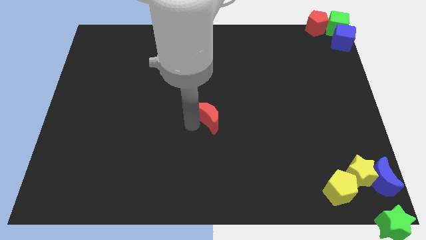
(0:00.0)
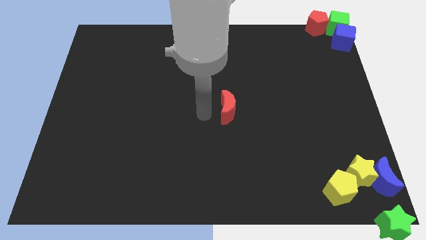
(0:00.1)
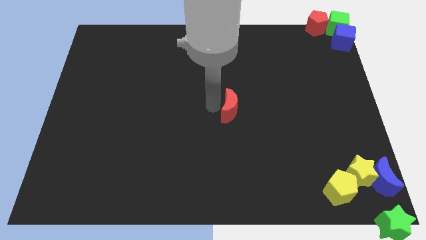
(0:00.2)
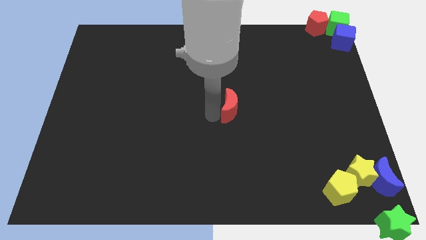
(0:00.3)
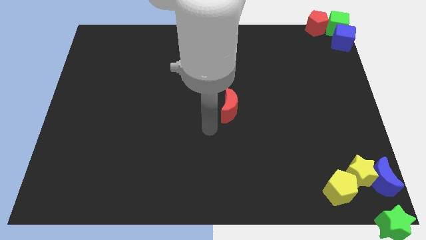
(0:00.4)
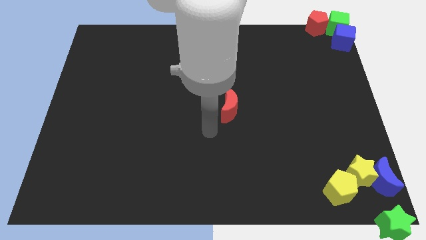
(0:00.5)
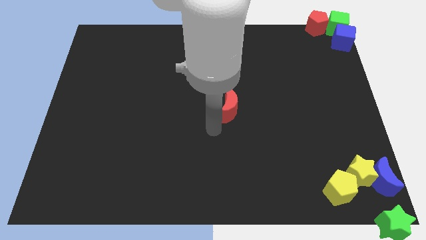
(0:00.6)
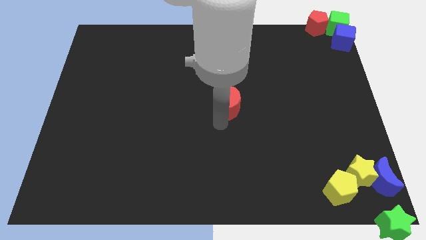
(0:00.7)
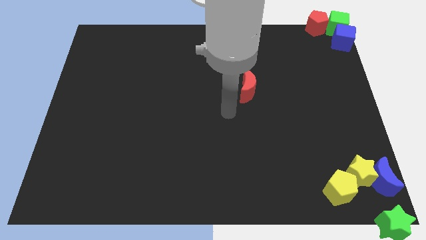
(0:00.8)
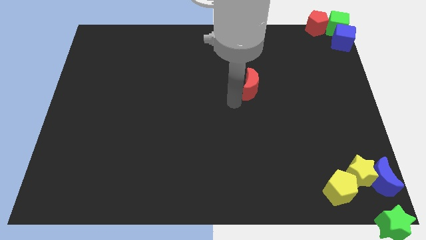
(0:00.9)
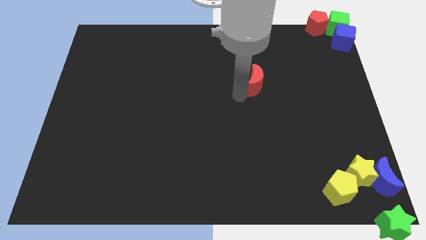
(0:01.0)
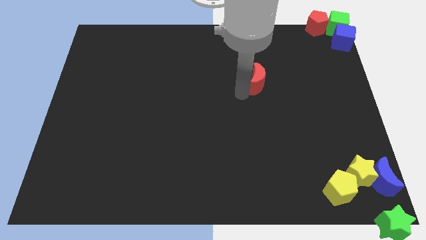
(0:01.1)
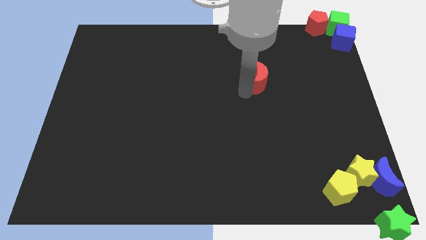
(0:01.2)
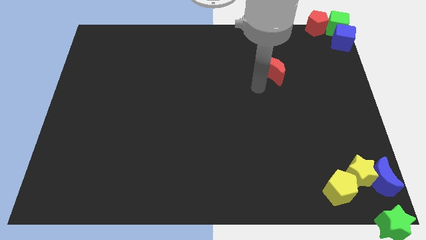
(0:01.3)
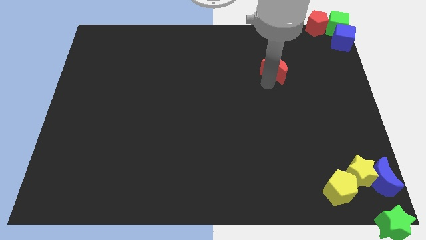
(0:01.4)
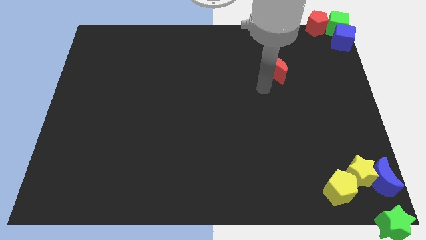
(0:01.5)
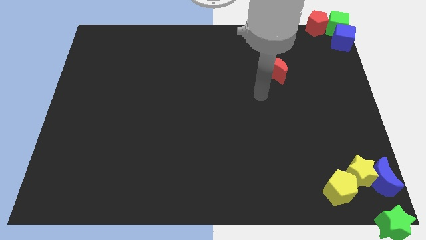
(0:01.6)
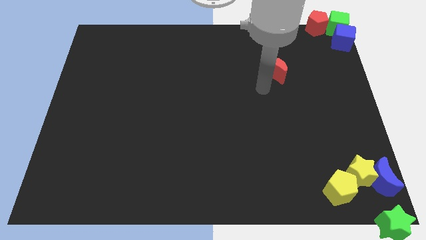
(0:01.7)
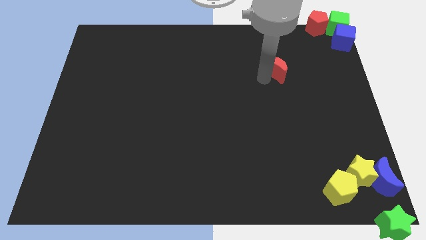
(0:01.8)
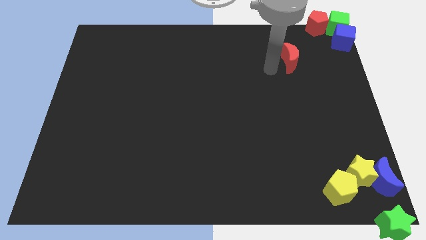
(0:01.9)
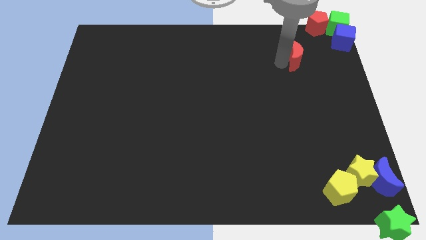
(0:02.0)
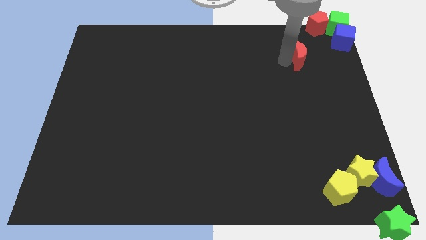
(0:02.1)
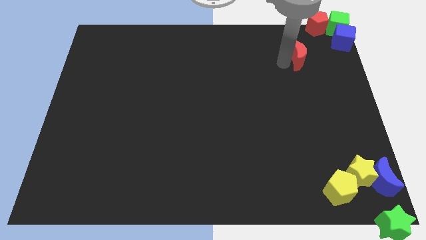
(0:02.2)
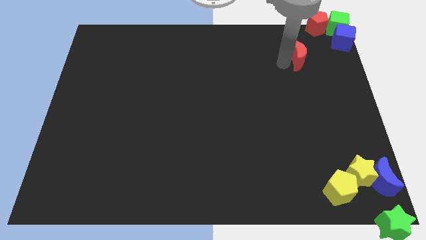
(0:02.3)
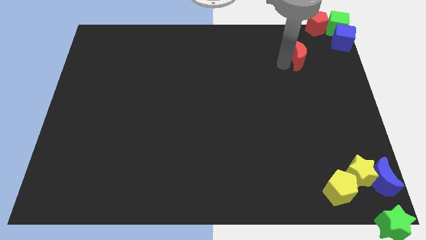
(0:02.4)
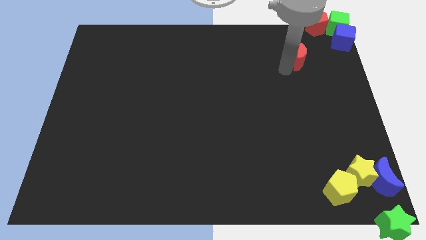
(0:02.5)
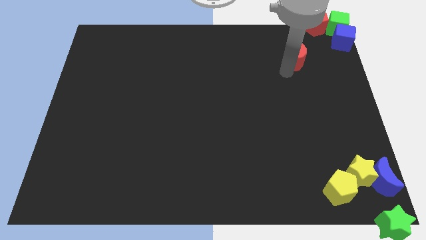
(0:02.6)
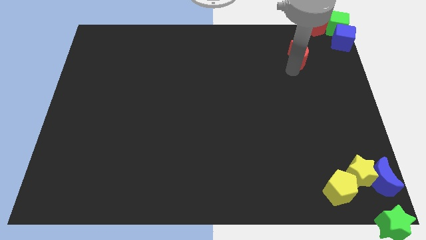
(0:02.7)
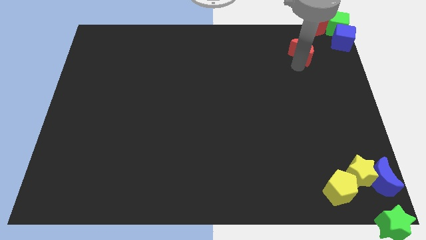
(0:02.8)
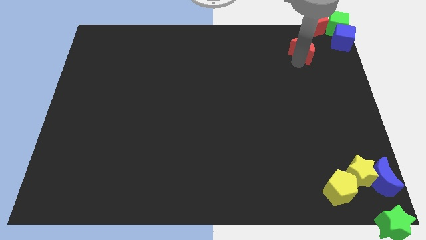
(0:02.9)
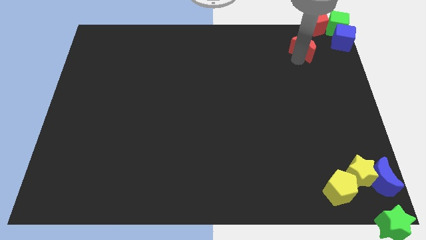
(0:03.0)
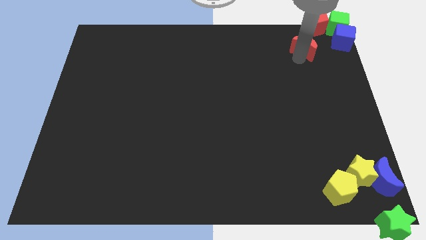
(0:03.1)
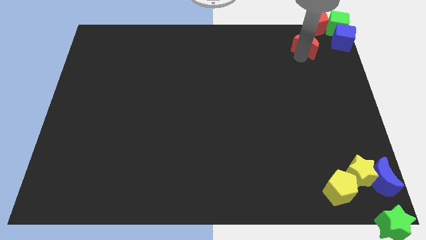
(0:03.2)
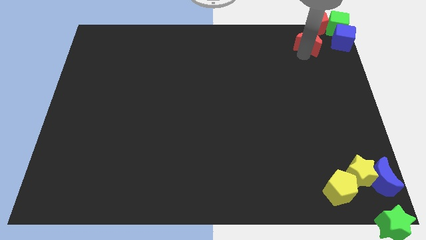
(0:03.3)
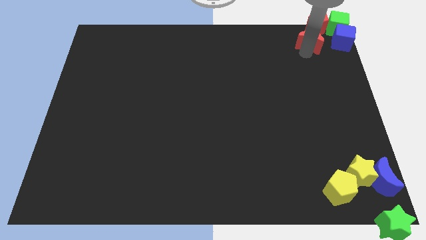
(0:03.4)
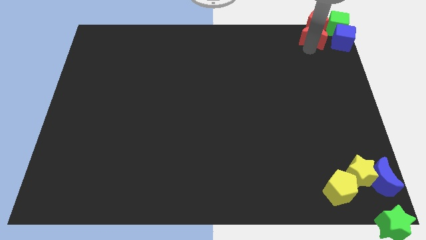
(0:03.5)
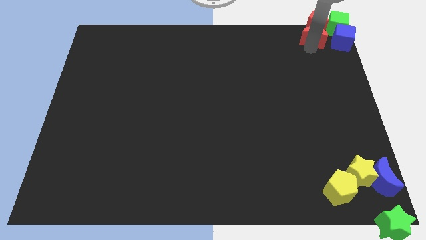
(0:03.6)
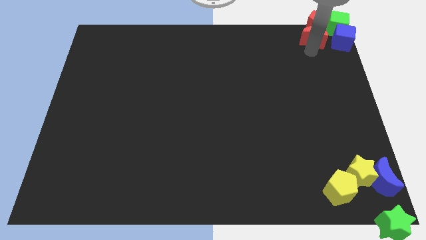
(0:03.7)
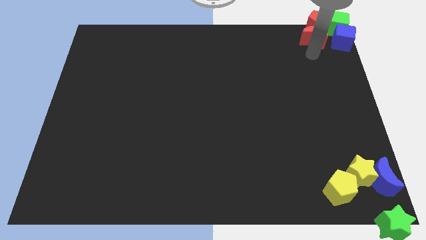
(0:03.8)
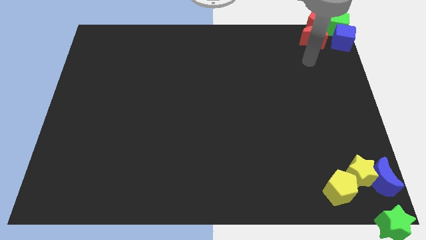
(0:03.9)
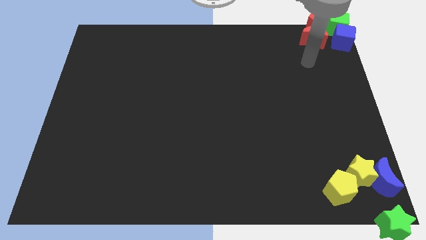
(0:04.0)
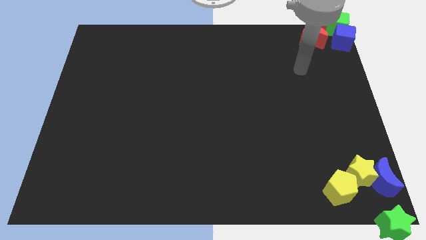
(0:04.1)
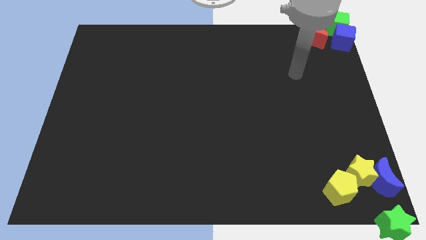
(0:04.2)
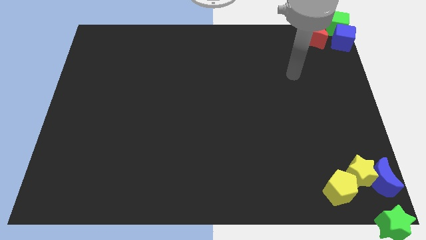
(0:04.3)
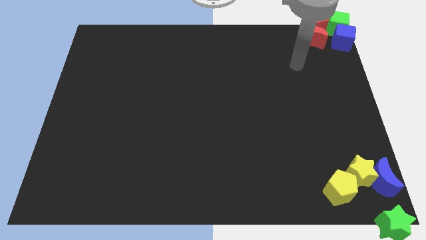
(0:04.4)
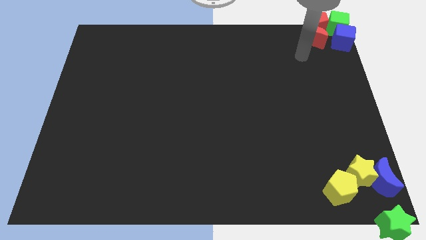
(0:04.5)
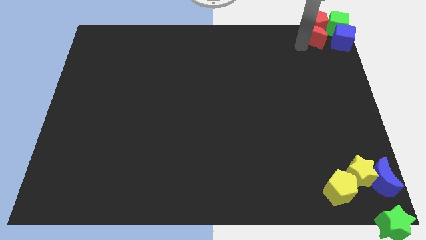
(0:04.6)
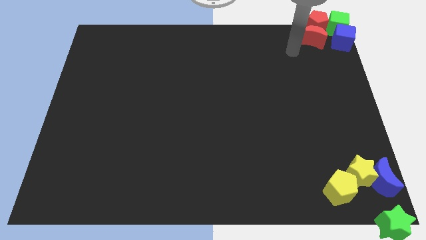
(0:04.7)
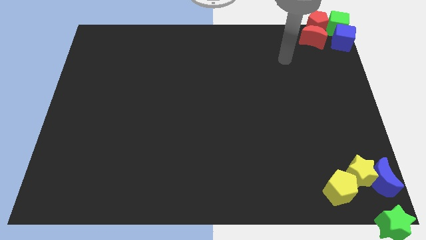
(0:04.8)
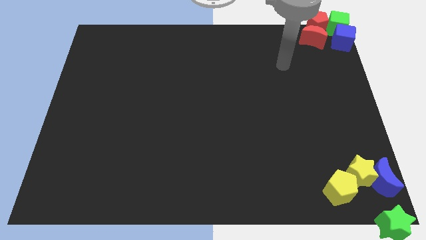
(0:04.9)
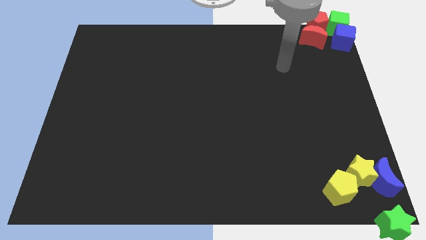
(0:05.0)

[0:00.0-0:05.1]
add the red crescent to the group of blocks at the top right corner of the board

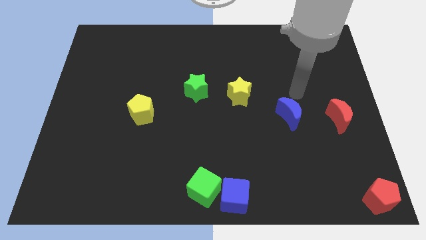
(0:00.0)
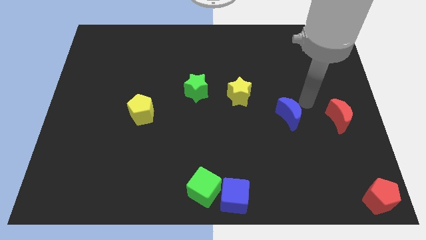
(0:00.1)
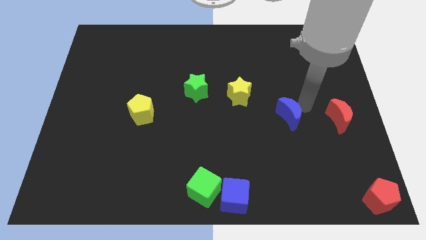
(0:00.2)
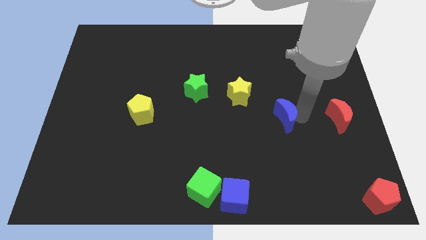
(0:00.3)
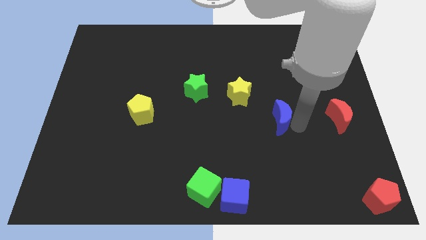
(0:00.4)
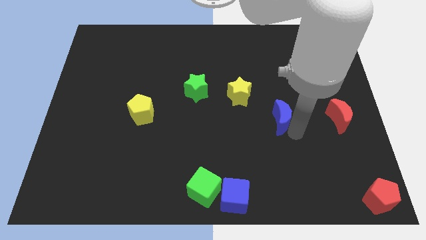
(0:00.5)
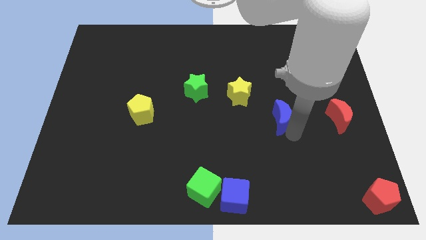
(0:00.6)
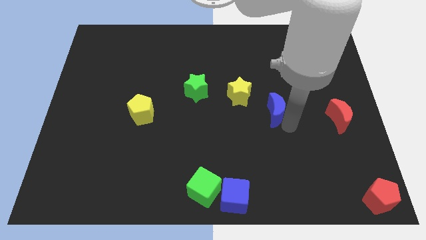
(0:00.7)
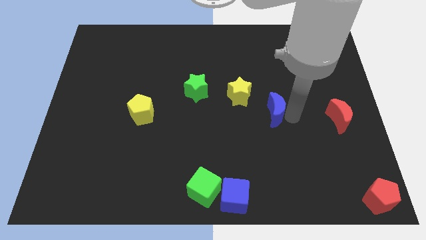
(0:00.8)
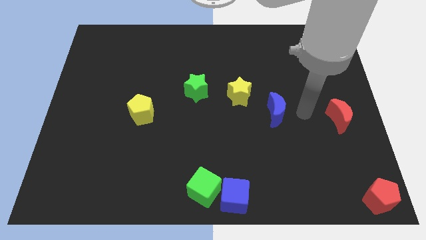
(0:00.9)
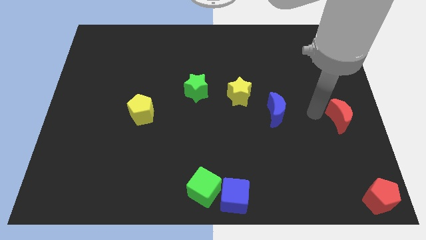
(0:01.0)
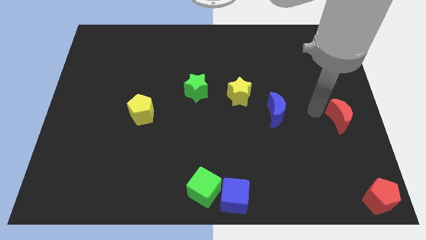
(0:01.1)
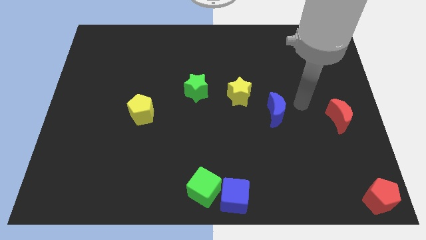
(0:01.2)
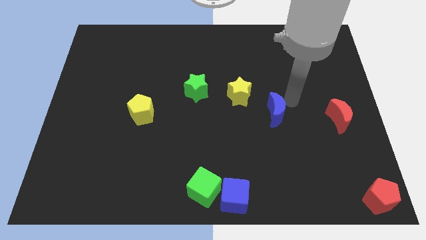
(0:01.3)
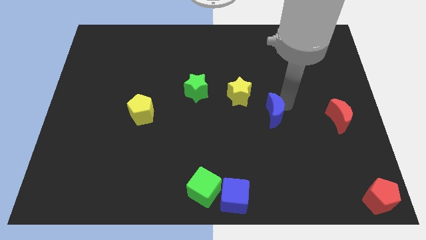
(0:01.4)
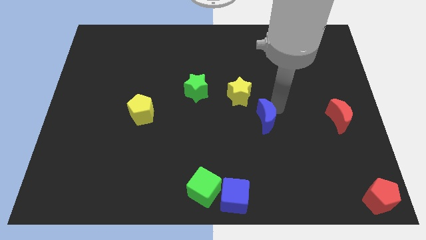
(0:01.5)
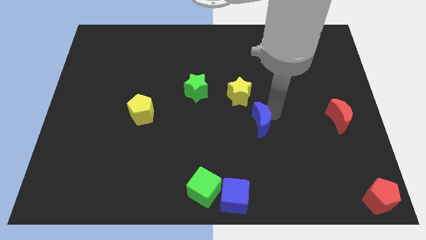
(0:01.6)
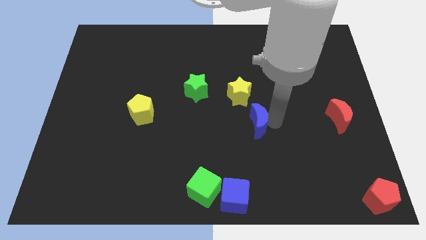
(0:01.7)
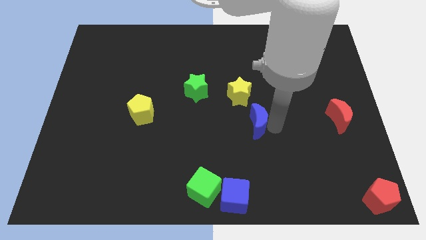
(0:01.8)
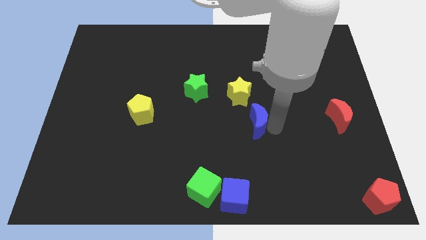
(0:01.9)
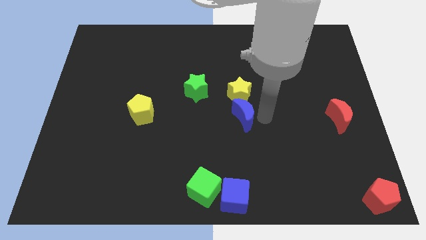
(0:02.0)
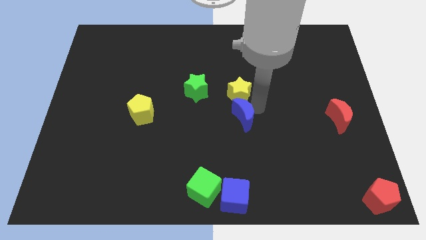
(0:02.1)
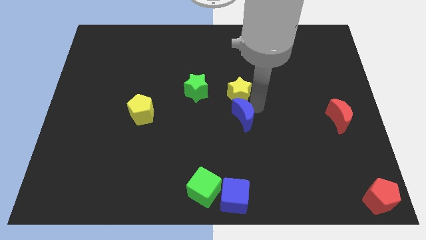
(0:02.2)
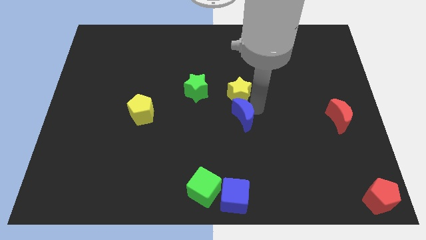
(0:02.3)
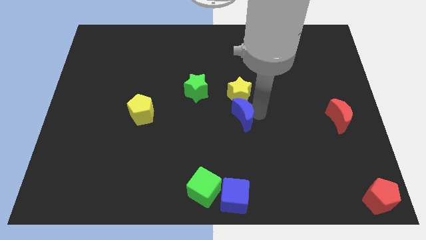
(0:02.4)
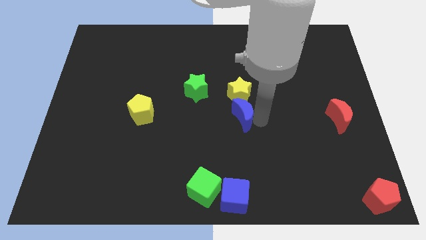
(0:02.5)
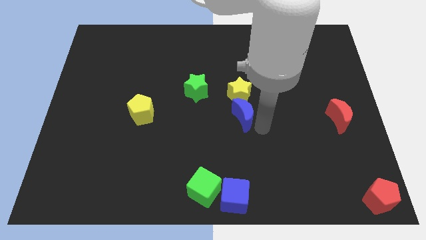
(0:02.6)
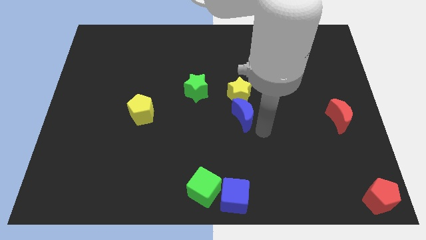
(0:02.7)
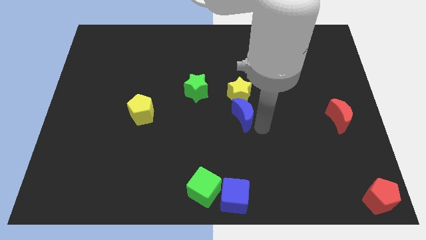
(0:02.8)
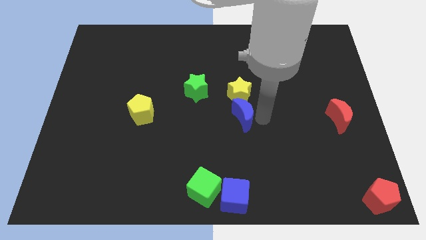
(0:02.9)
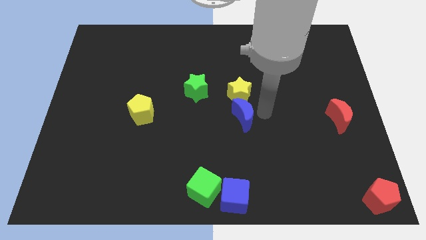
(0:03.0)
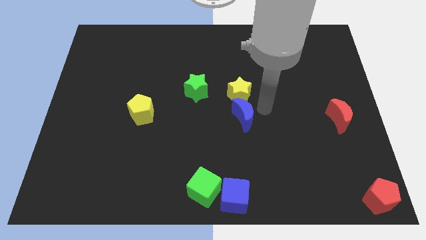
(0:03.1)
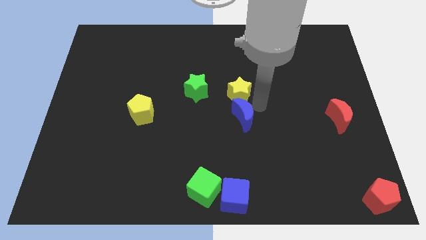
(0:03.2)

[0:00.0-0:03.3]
push the blue moon to the bottom side of the yellow star

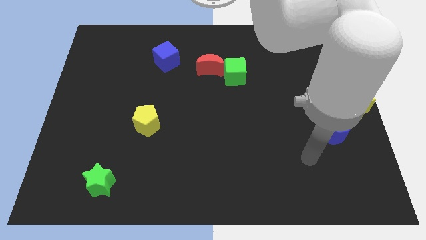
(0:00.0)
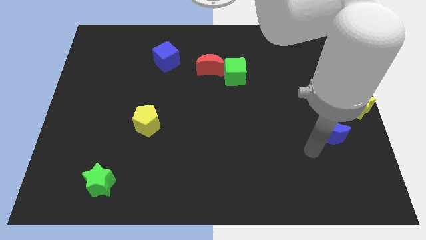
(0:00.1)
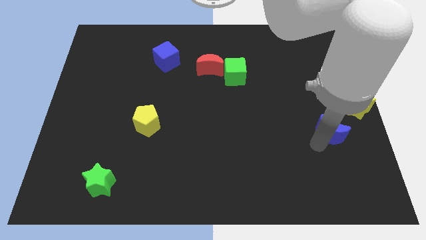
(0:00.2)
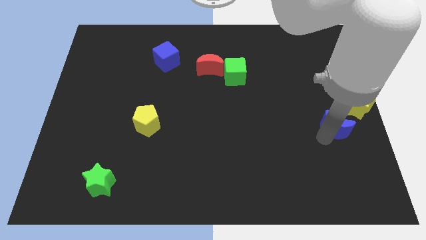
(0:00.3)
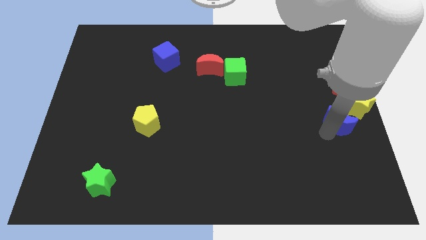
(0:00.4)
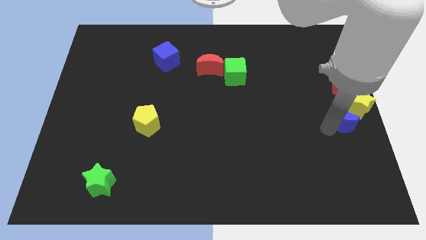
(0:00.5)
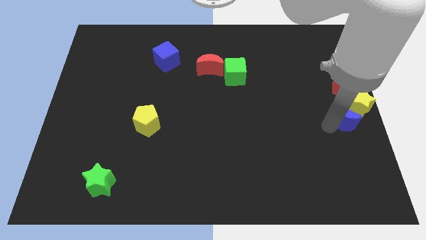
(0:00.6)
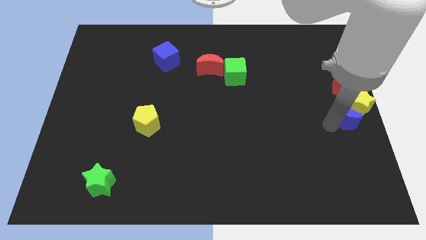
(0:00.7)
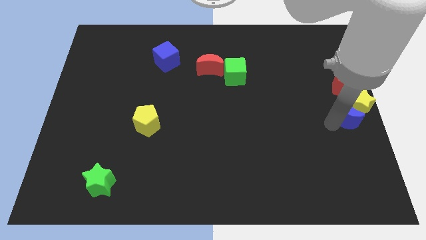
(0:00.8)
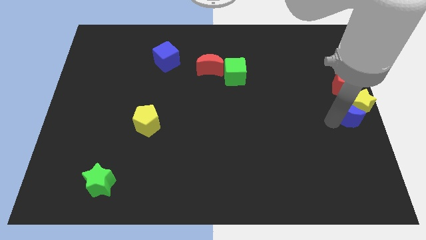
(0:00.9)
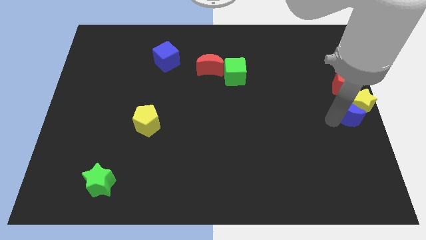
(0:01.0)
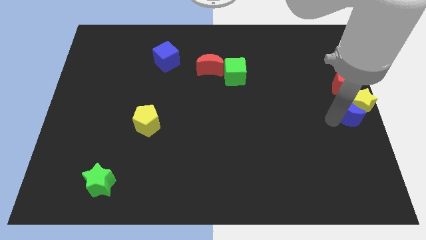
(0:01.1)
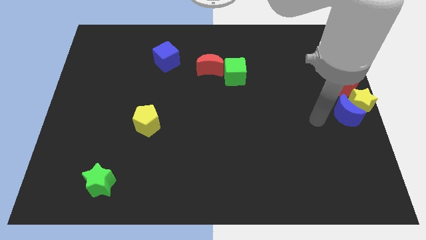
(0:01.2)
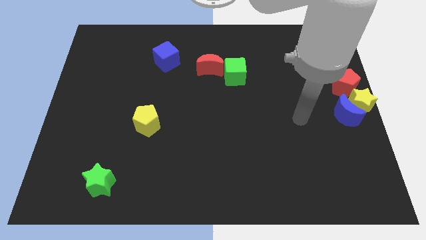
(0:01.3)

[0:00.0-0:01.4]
move blue moon into yellow star
